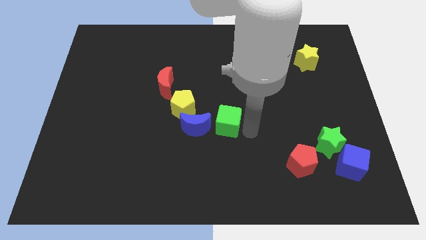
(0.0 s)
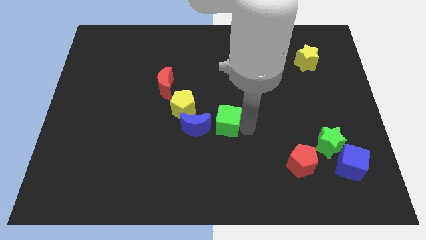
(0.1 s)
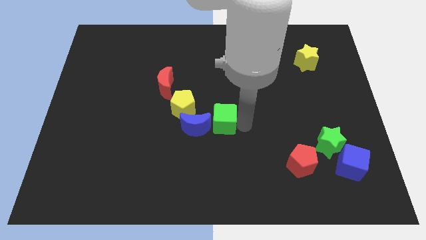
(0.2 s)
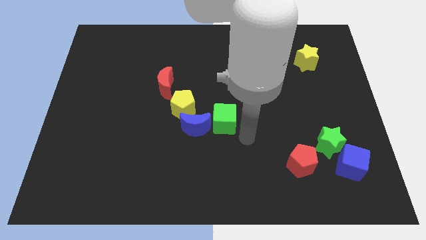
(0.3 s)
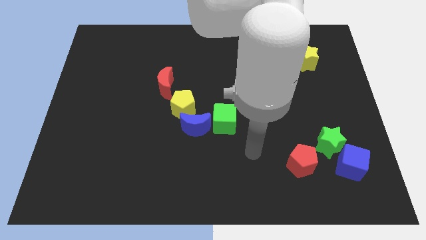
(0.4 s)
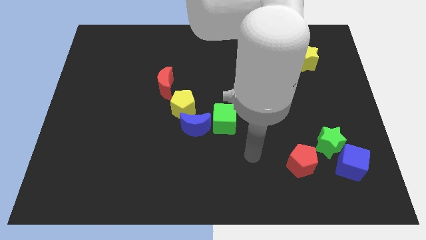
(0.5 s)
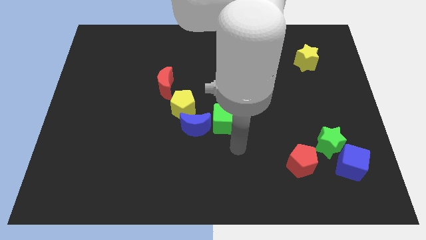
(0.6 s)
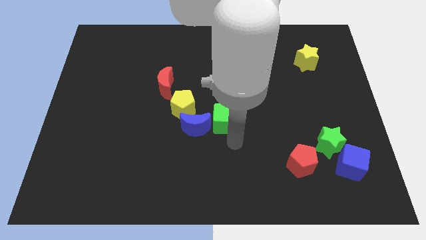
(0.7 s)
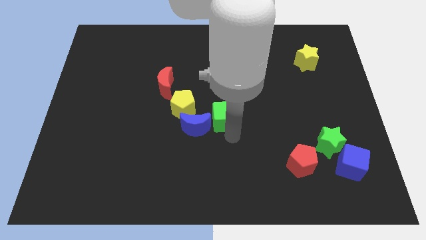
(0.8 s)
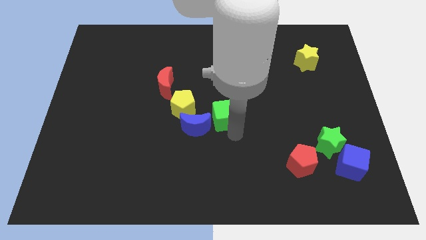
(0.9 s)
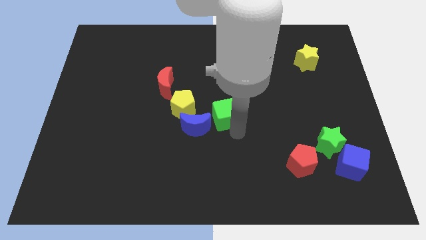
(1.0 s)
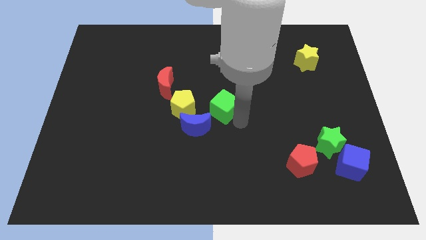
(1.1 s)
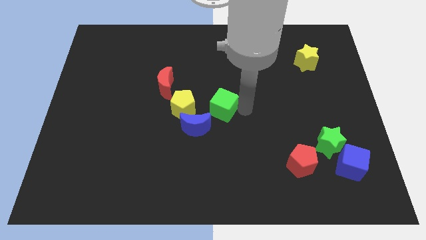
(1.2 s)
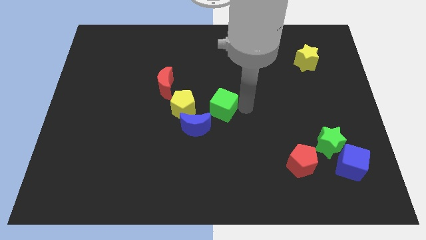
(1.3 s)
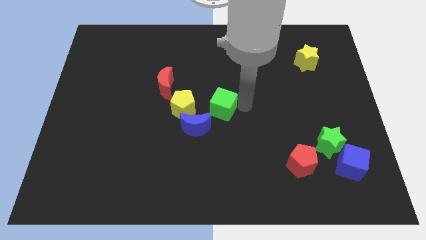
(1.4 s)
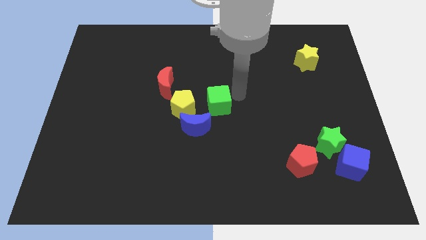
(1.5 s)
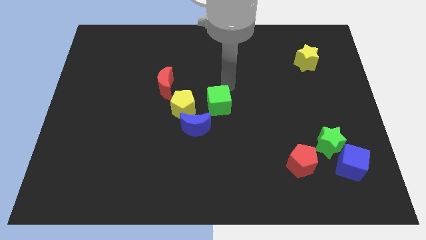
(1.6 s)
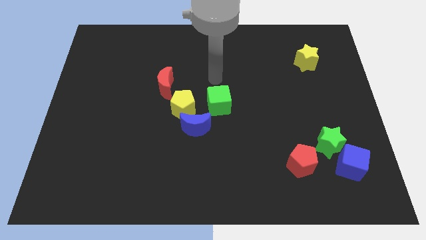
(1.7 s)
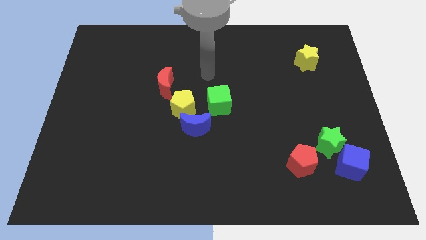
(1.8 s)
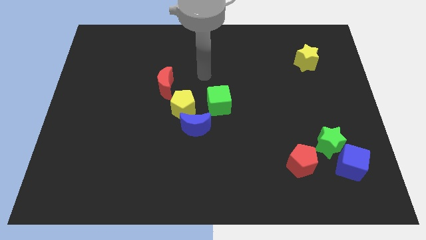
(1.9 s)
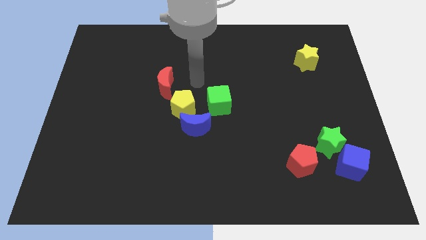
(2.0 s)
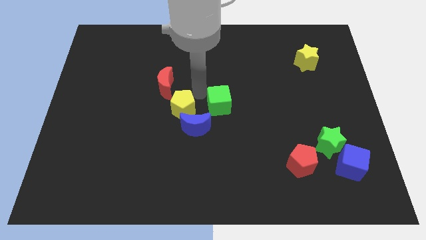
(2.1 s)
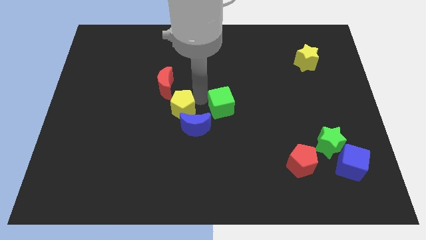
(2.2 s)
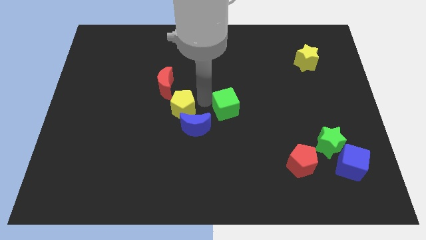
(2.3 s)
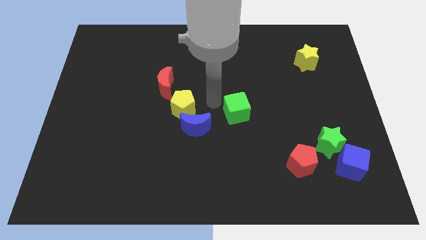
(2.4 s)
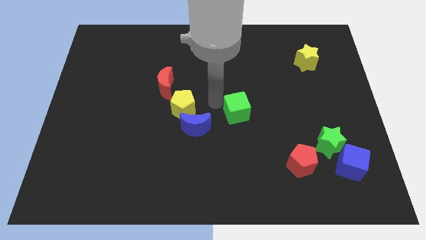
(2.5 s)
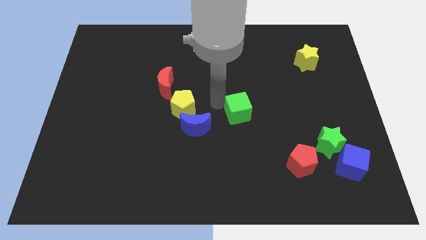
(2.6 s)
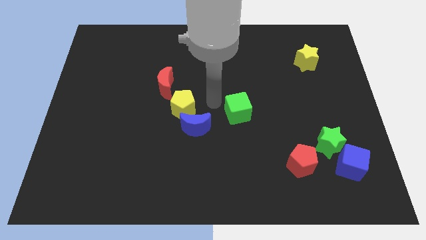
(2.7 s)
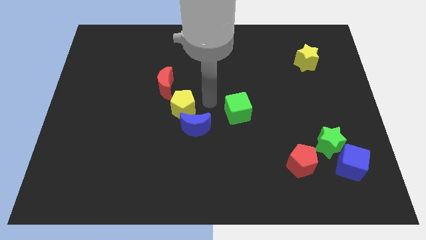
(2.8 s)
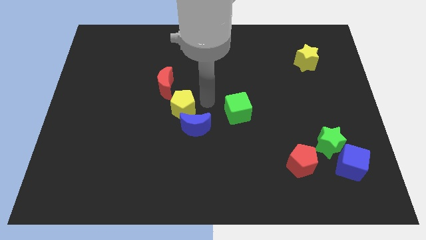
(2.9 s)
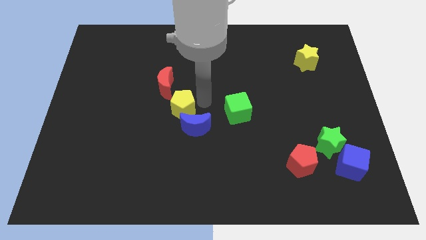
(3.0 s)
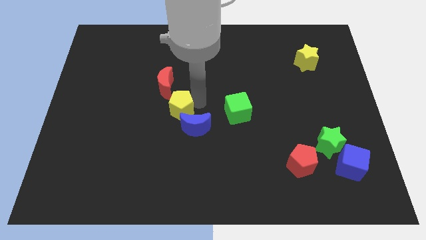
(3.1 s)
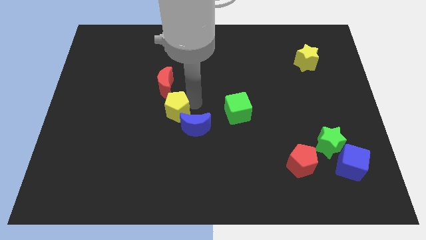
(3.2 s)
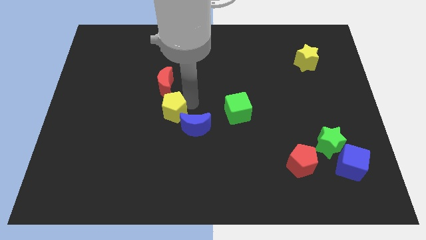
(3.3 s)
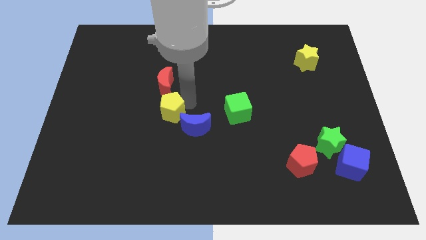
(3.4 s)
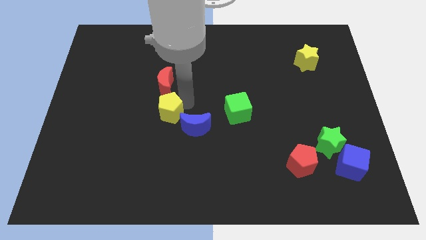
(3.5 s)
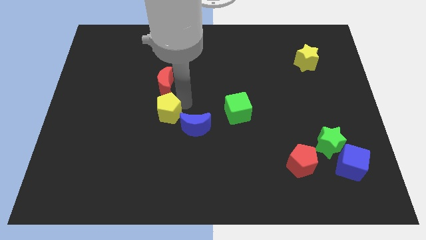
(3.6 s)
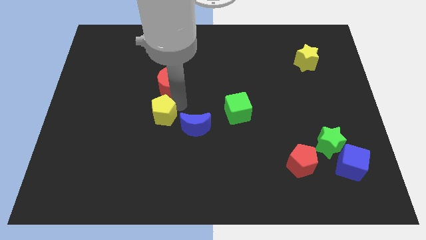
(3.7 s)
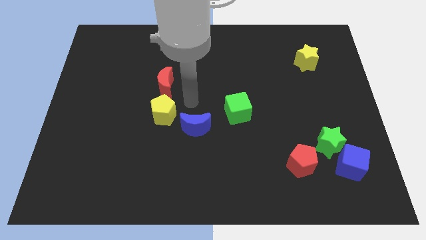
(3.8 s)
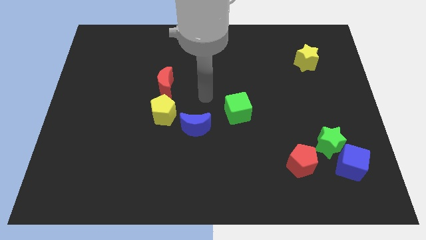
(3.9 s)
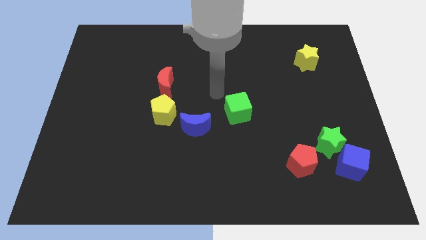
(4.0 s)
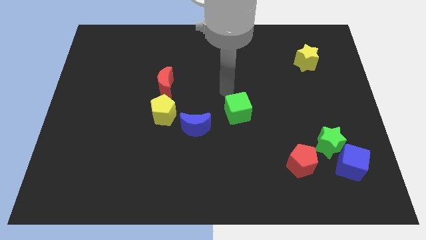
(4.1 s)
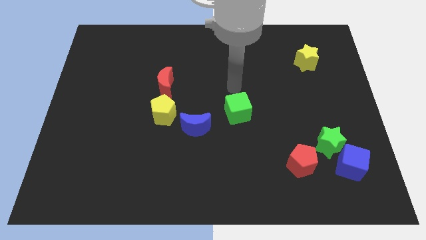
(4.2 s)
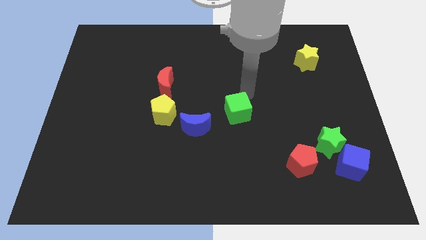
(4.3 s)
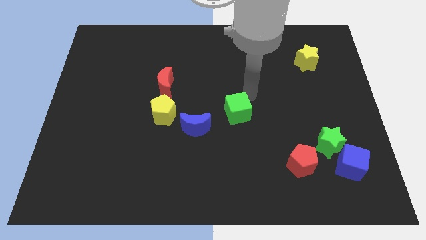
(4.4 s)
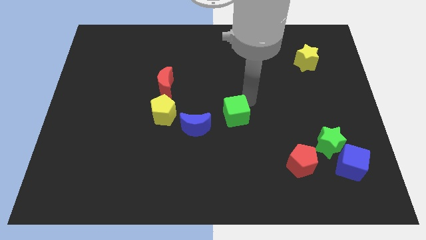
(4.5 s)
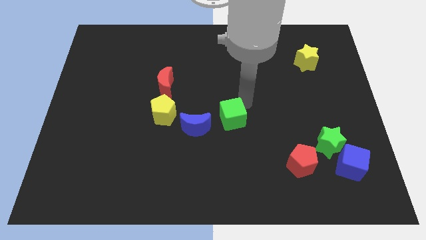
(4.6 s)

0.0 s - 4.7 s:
slightly push yellow pentagon

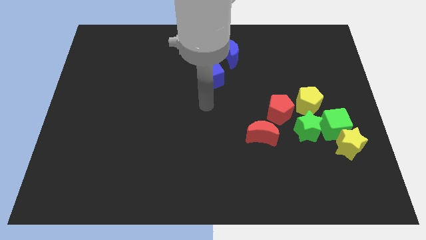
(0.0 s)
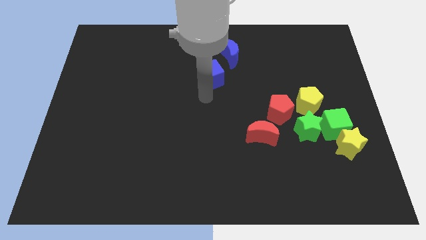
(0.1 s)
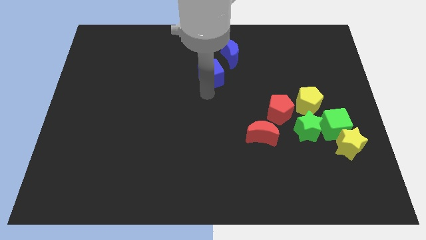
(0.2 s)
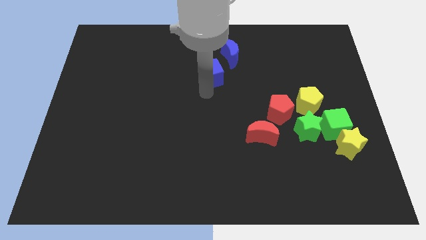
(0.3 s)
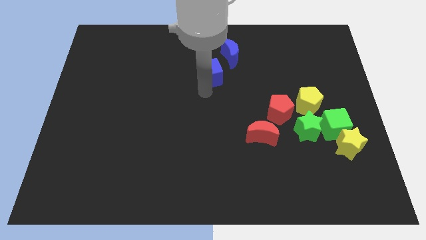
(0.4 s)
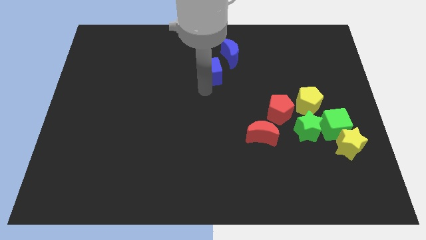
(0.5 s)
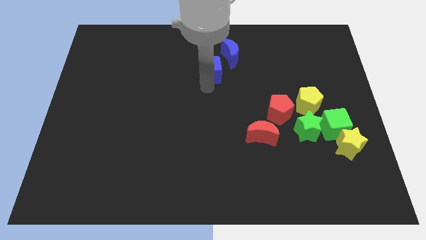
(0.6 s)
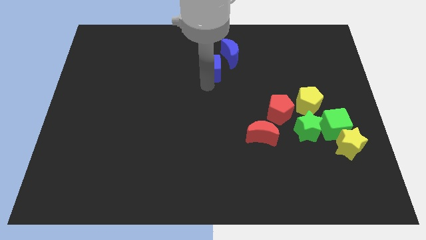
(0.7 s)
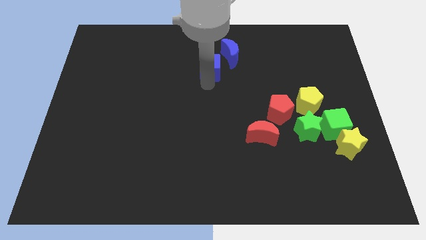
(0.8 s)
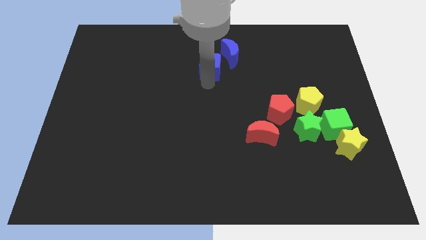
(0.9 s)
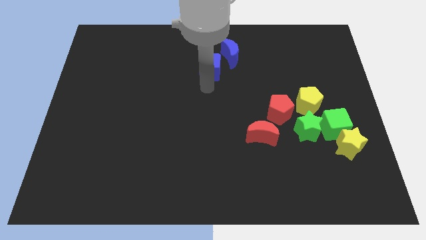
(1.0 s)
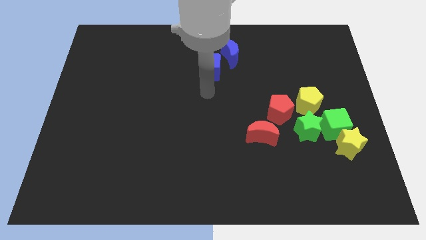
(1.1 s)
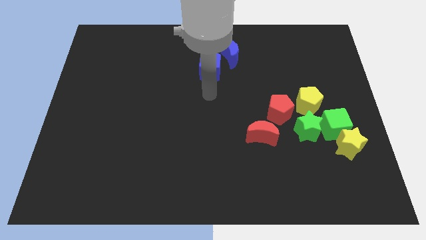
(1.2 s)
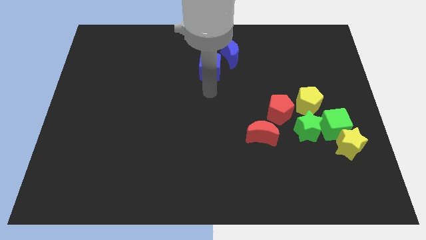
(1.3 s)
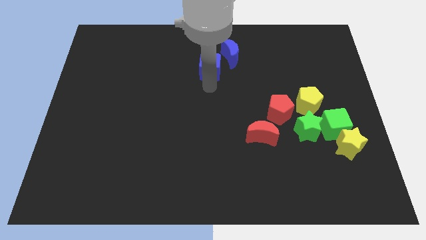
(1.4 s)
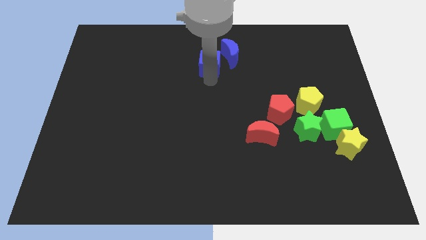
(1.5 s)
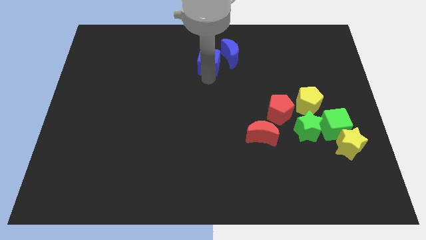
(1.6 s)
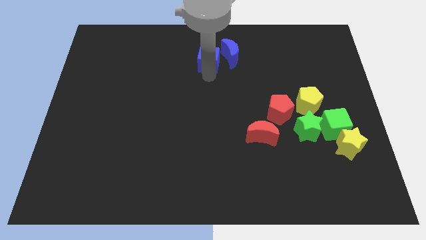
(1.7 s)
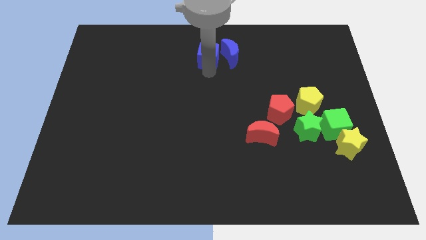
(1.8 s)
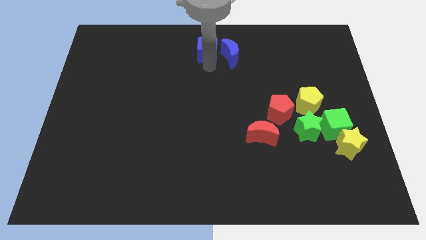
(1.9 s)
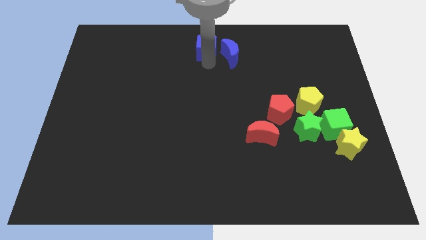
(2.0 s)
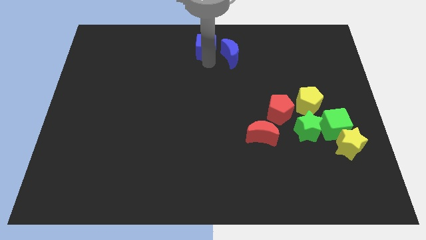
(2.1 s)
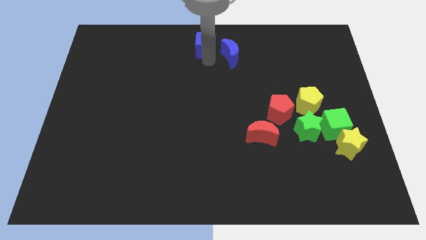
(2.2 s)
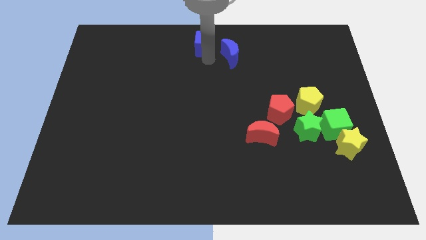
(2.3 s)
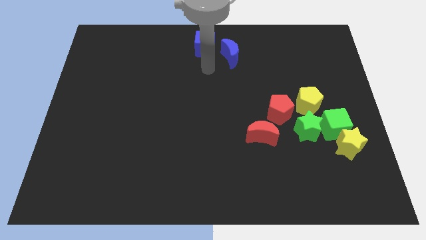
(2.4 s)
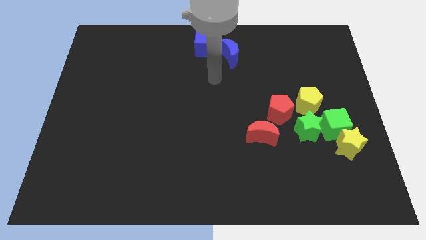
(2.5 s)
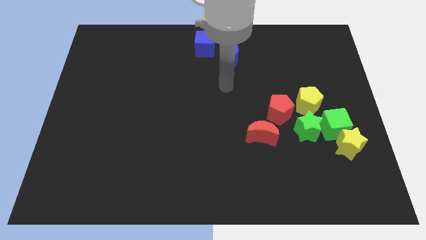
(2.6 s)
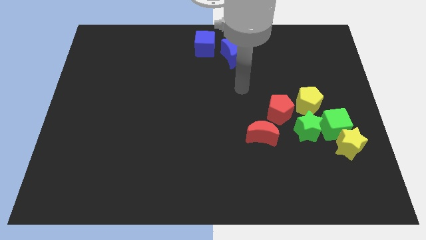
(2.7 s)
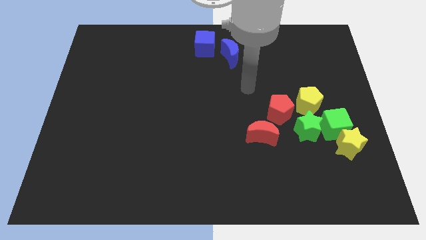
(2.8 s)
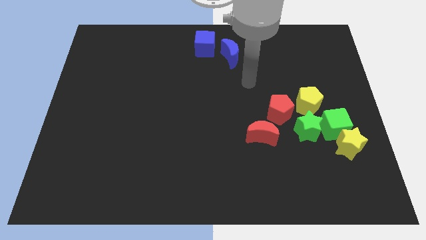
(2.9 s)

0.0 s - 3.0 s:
push the blue cube to the top left of the blue crescent

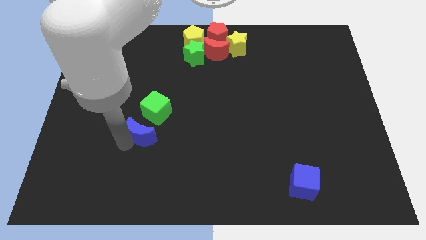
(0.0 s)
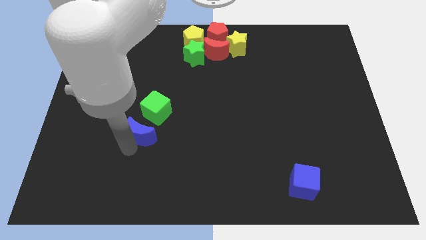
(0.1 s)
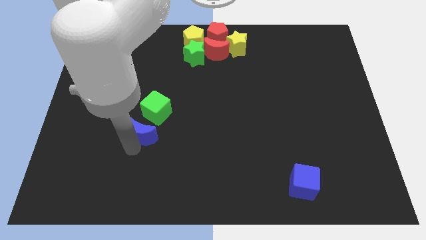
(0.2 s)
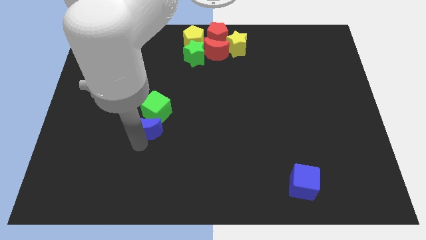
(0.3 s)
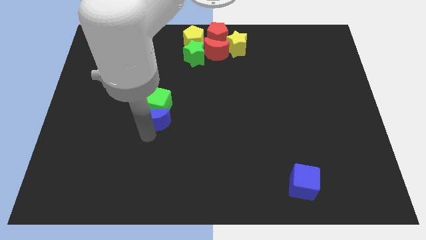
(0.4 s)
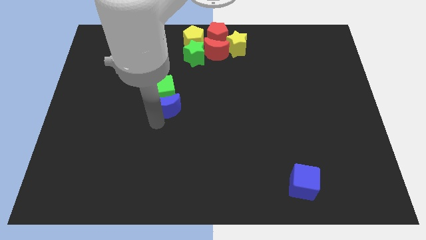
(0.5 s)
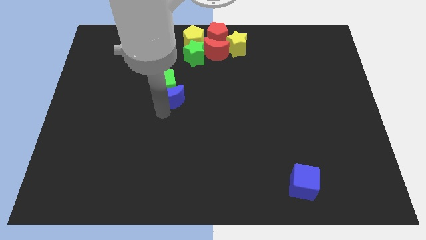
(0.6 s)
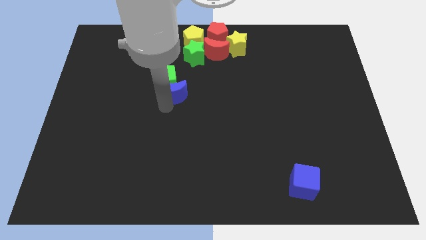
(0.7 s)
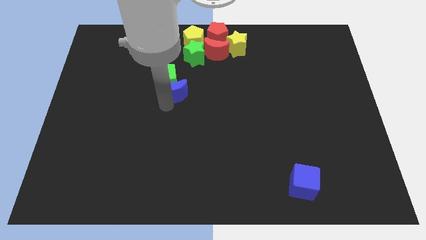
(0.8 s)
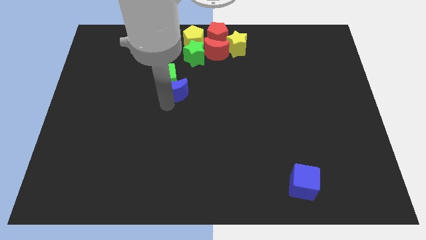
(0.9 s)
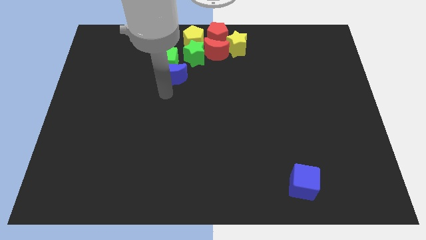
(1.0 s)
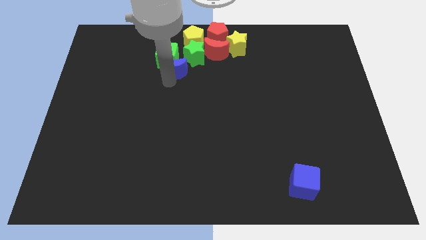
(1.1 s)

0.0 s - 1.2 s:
slide blue moon into green cube
